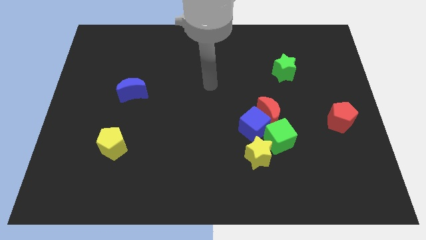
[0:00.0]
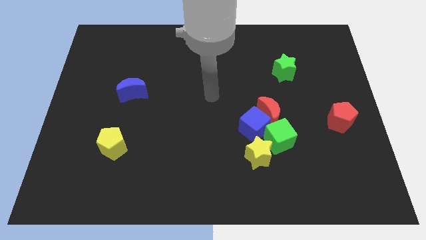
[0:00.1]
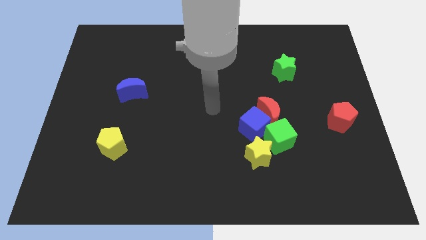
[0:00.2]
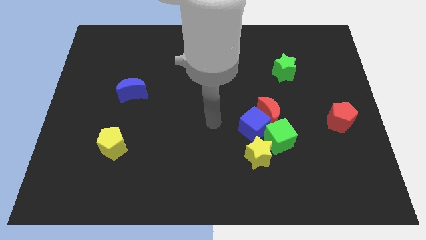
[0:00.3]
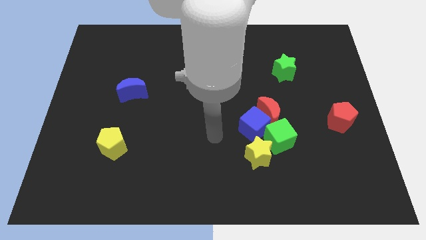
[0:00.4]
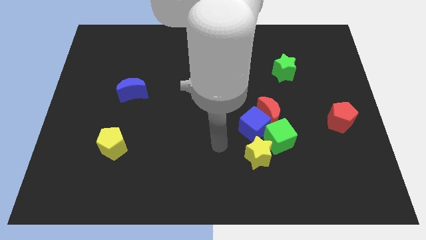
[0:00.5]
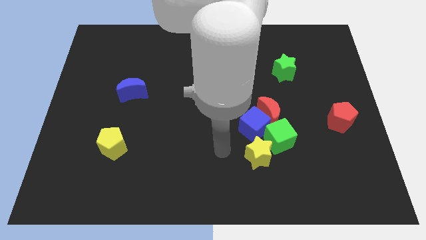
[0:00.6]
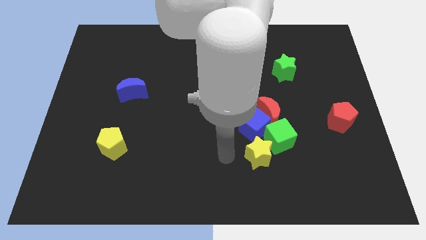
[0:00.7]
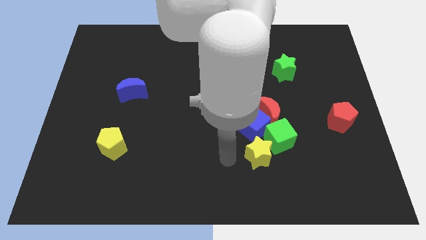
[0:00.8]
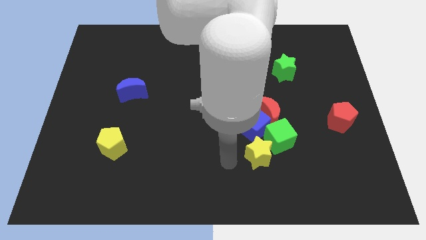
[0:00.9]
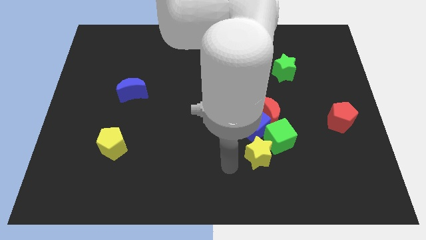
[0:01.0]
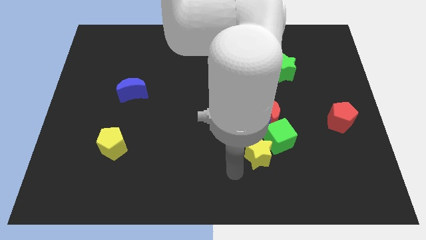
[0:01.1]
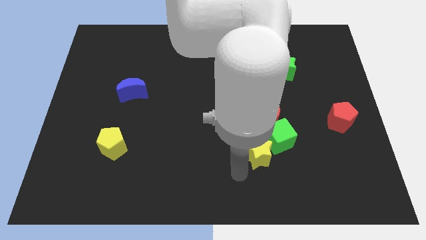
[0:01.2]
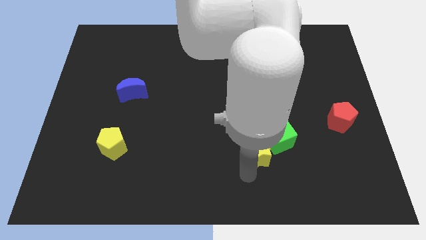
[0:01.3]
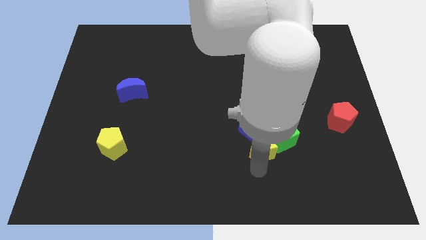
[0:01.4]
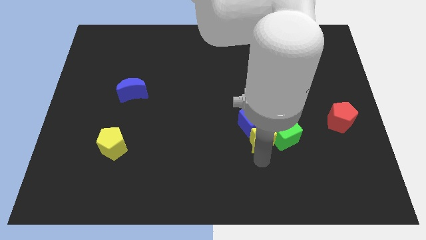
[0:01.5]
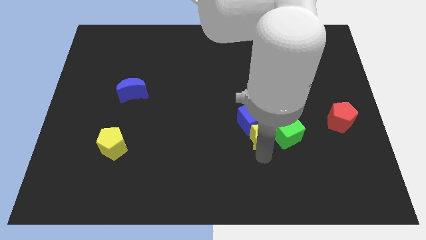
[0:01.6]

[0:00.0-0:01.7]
push the yellow star into the blue cube

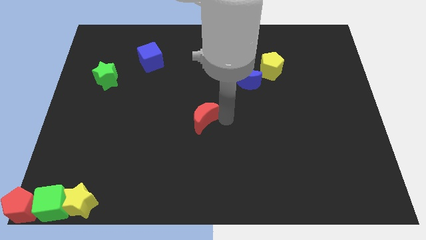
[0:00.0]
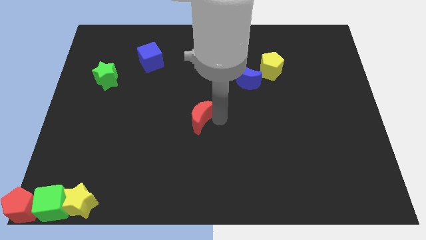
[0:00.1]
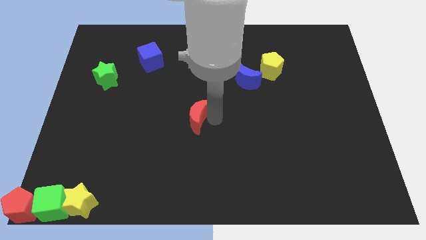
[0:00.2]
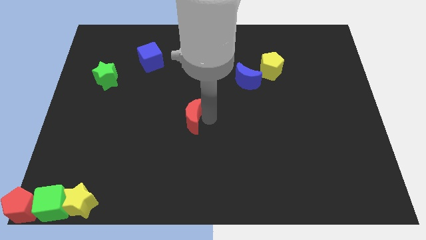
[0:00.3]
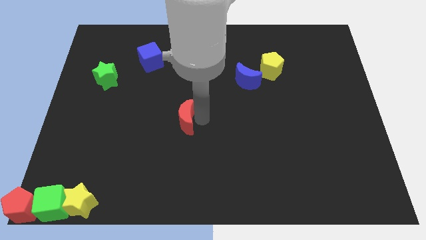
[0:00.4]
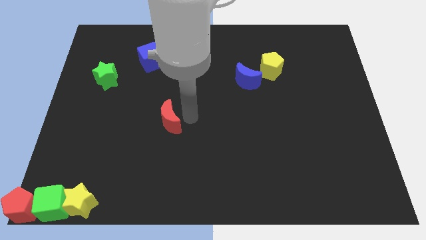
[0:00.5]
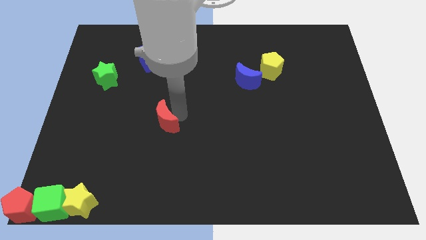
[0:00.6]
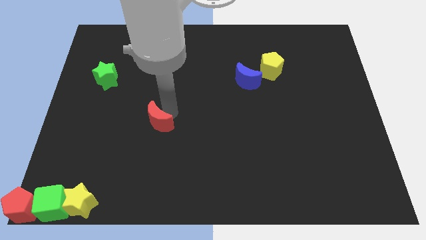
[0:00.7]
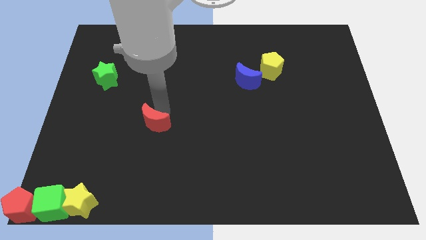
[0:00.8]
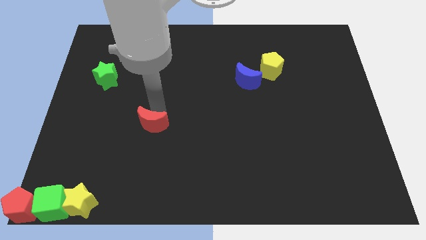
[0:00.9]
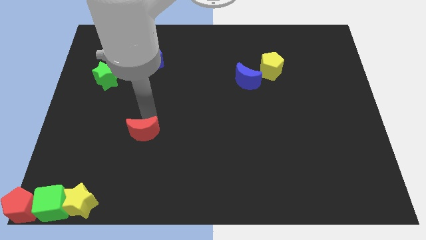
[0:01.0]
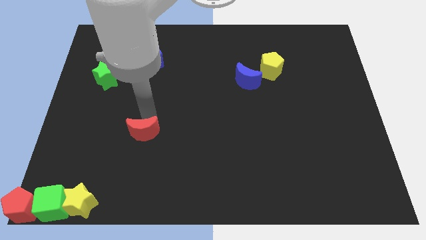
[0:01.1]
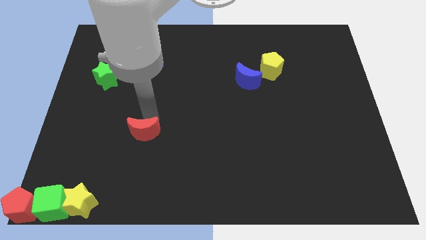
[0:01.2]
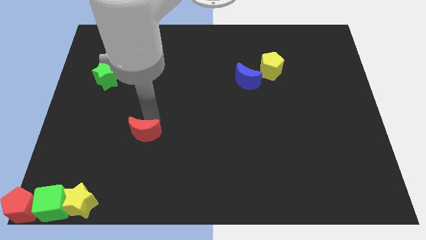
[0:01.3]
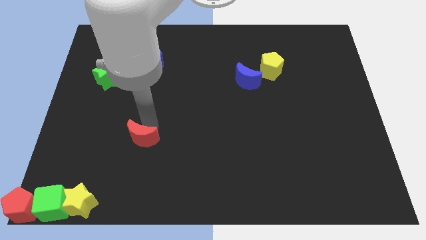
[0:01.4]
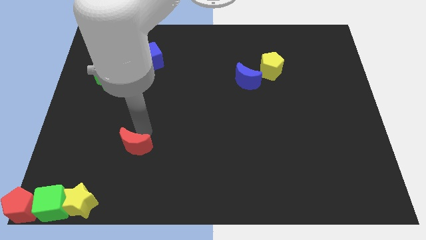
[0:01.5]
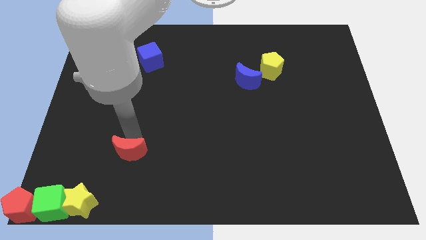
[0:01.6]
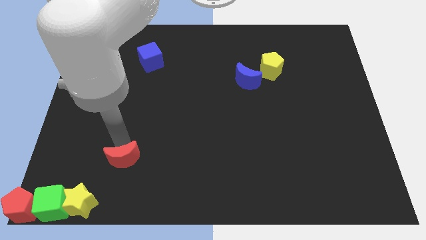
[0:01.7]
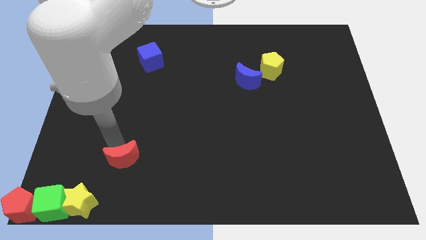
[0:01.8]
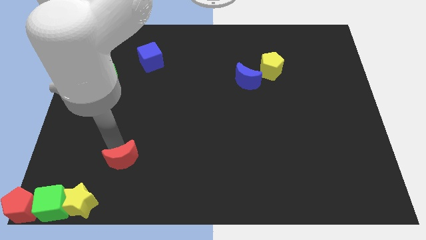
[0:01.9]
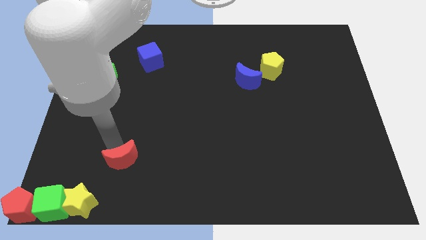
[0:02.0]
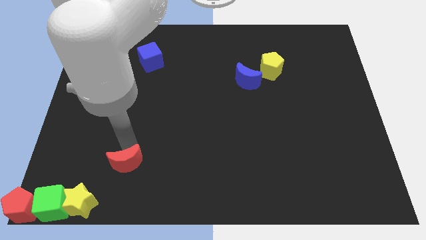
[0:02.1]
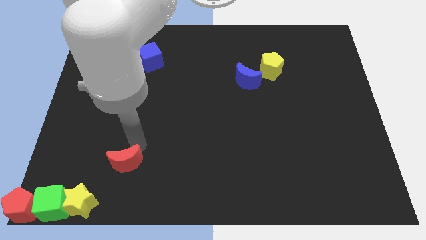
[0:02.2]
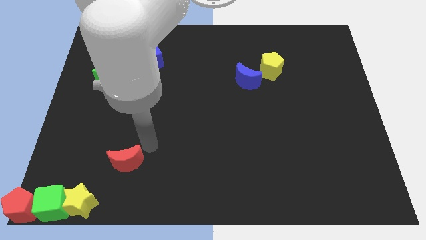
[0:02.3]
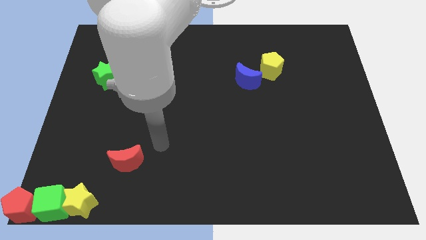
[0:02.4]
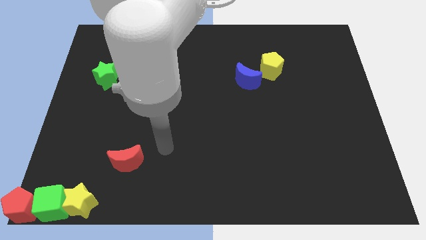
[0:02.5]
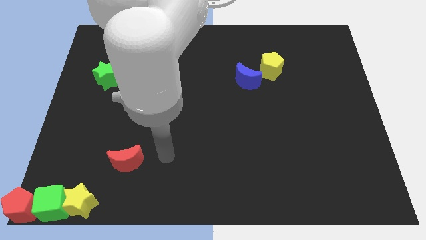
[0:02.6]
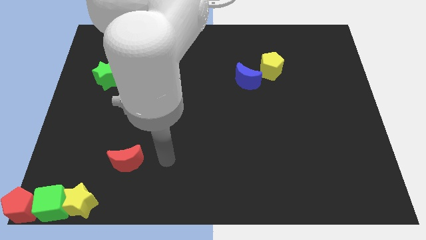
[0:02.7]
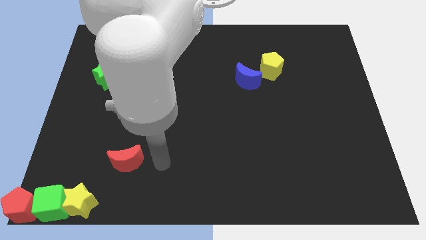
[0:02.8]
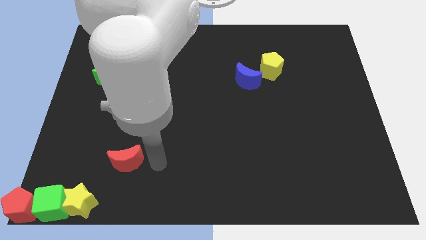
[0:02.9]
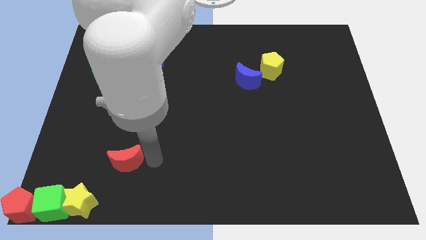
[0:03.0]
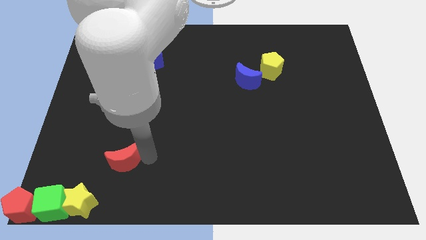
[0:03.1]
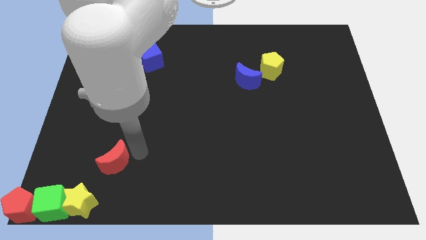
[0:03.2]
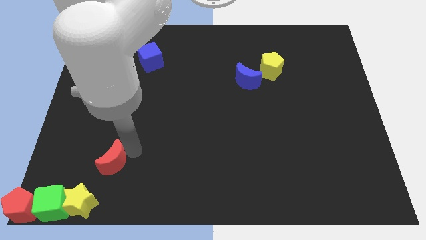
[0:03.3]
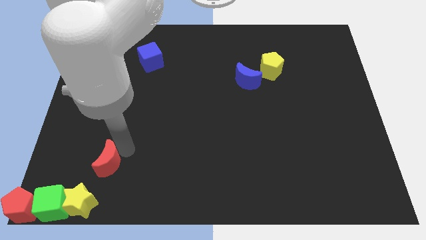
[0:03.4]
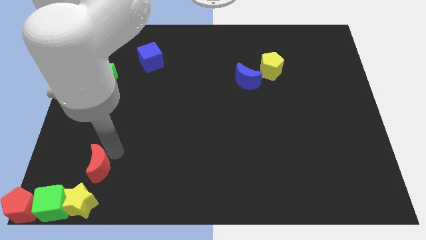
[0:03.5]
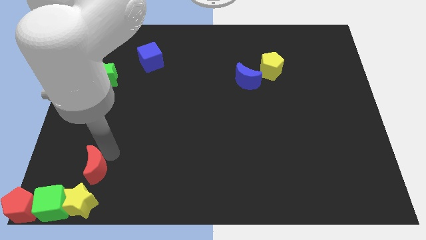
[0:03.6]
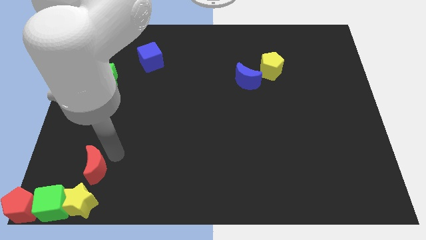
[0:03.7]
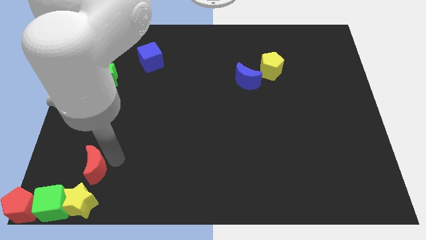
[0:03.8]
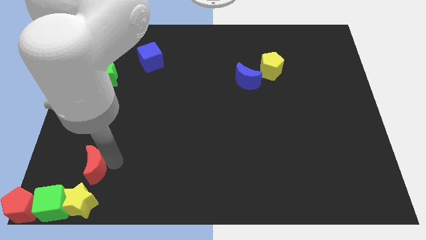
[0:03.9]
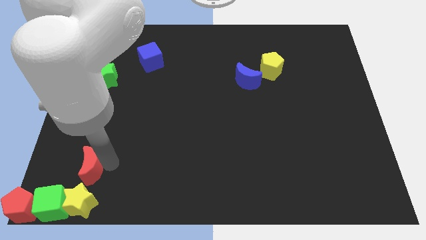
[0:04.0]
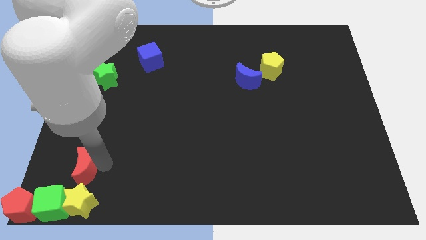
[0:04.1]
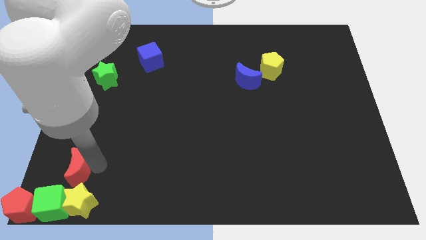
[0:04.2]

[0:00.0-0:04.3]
place the red moon at the top of the yellow star

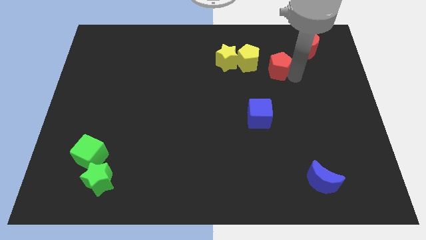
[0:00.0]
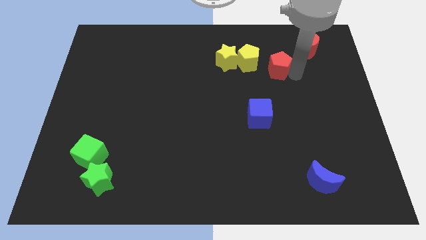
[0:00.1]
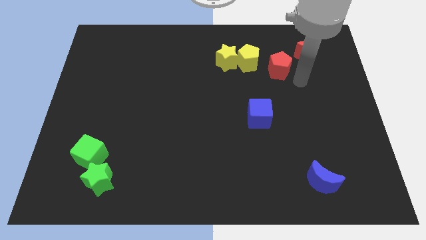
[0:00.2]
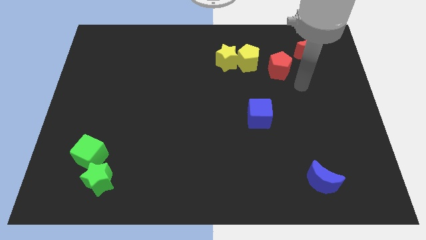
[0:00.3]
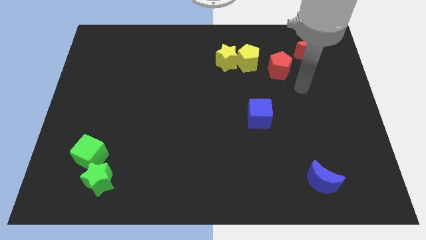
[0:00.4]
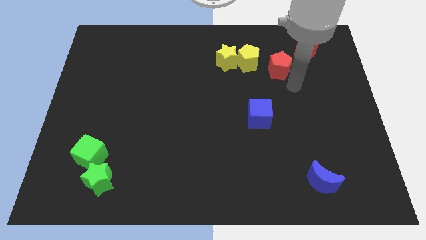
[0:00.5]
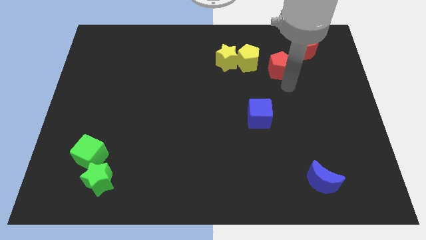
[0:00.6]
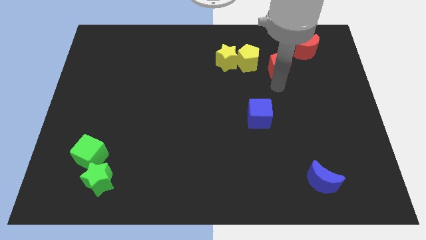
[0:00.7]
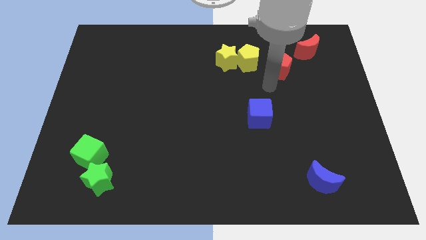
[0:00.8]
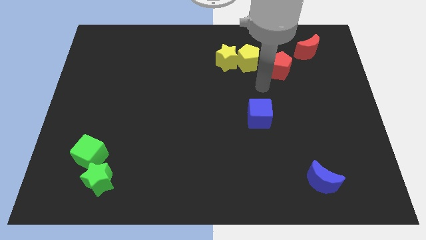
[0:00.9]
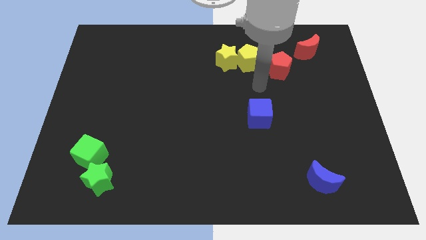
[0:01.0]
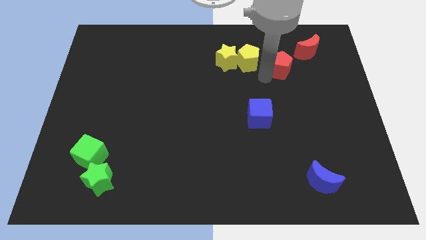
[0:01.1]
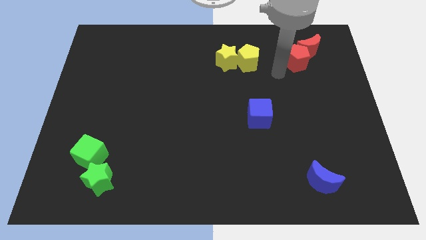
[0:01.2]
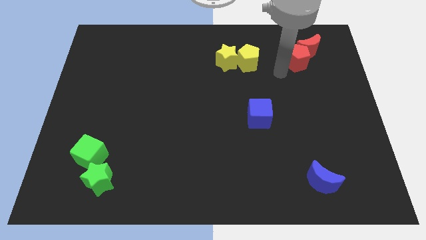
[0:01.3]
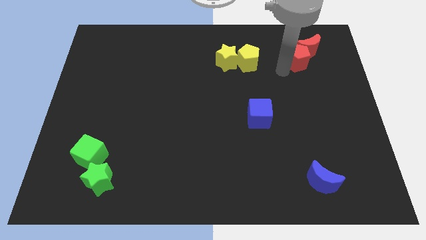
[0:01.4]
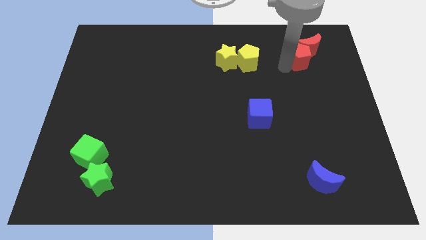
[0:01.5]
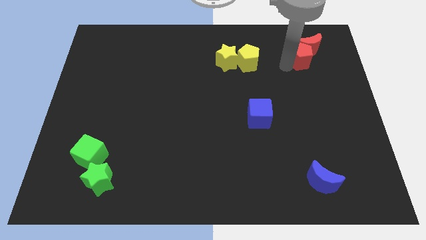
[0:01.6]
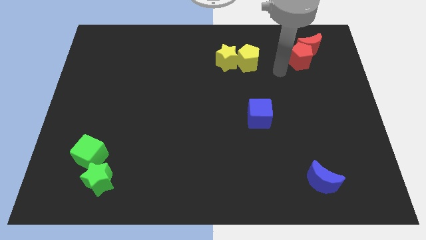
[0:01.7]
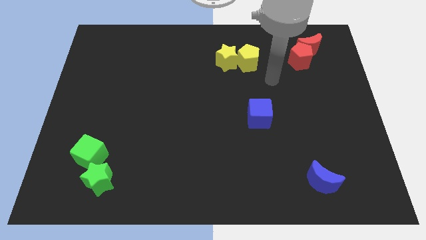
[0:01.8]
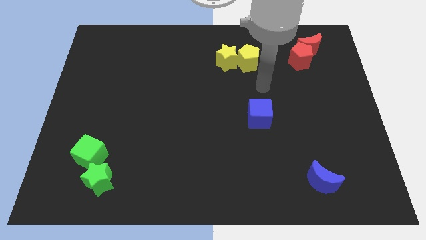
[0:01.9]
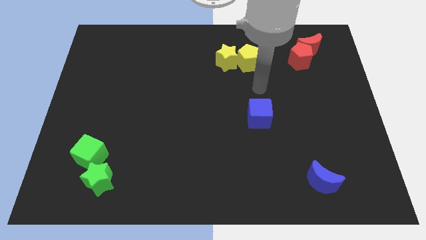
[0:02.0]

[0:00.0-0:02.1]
push the red pentagon towards the red criscent

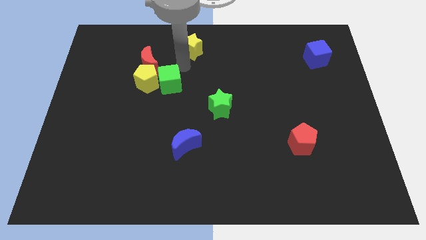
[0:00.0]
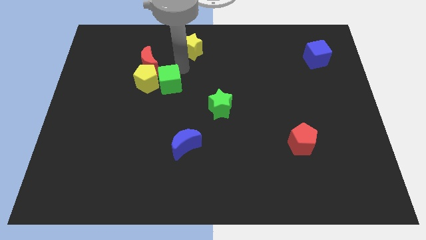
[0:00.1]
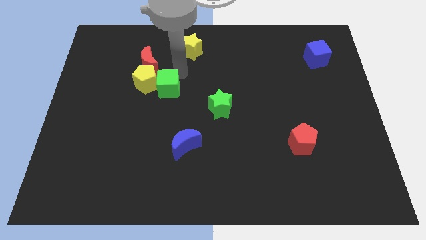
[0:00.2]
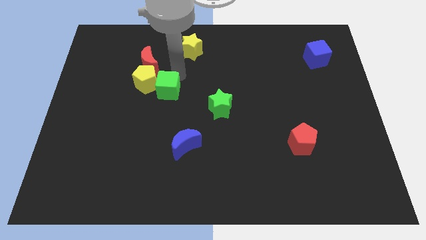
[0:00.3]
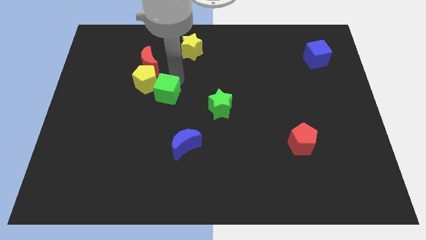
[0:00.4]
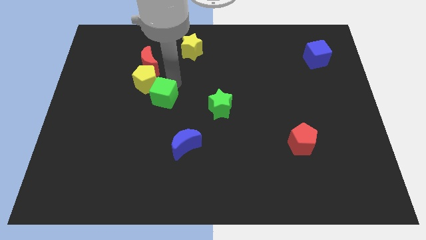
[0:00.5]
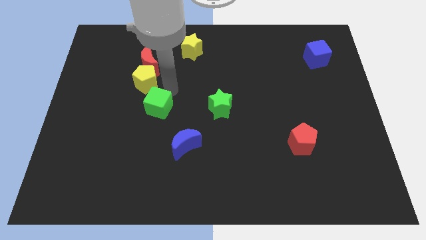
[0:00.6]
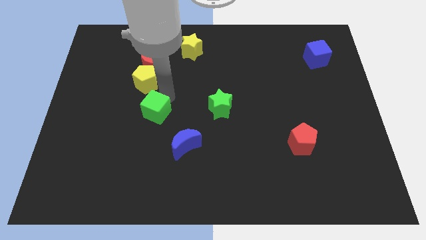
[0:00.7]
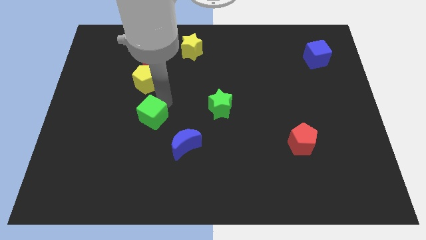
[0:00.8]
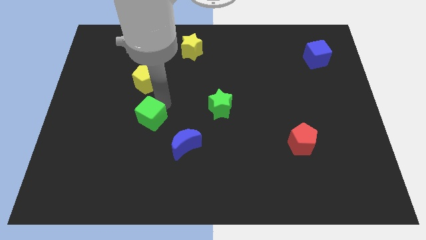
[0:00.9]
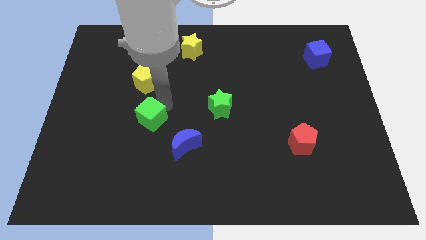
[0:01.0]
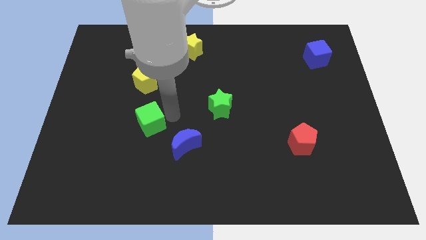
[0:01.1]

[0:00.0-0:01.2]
separate the green cube and yellow pentagon
